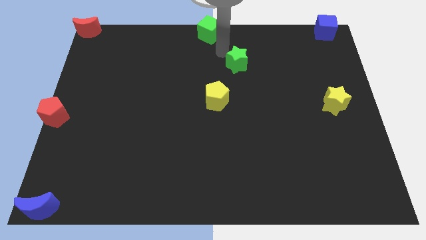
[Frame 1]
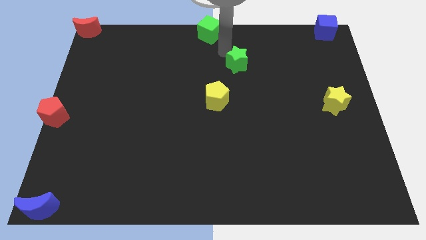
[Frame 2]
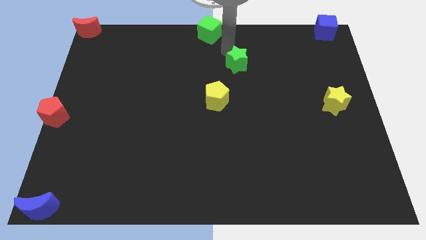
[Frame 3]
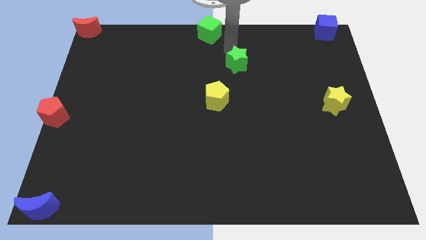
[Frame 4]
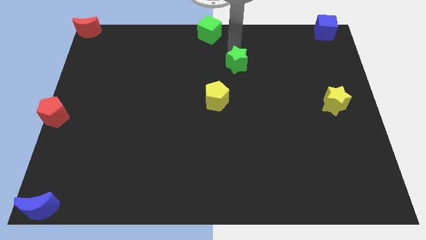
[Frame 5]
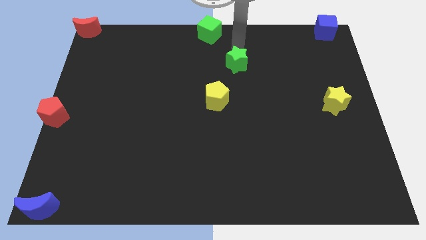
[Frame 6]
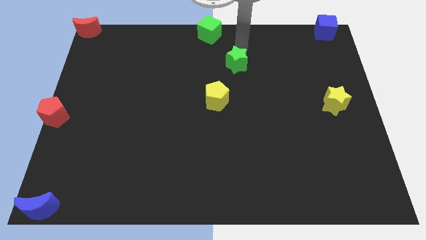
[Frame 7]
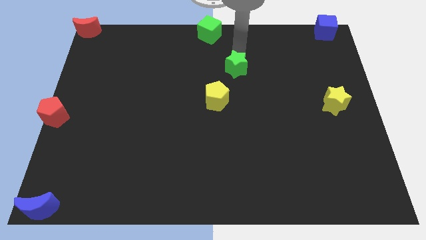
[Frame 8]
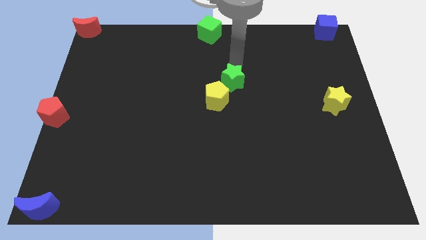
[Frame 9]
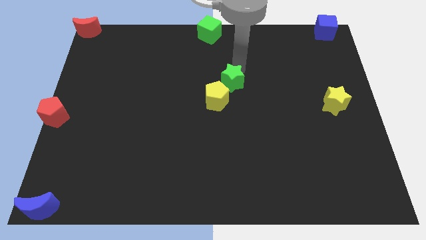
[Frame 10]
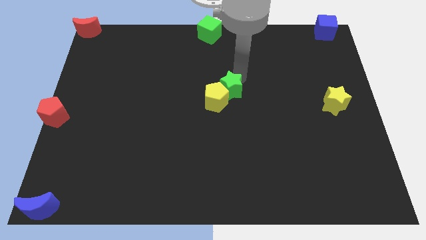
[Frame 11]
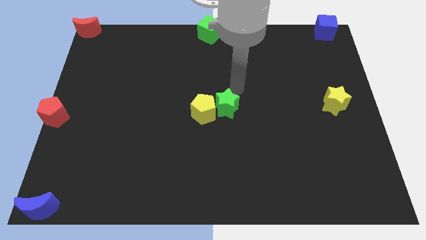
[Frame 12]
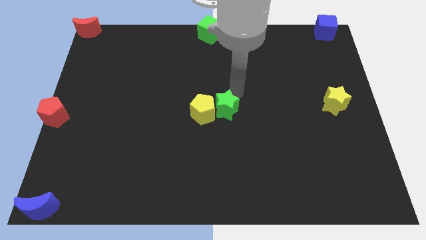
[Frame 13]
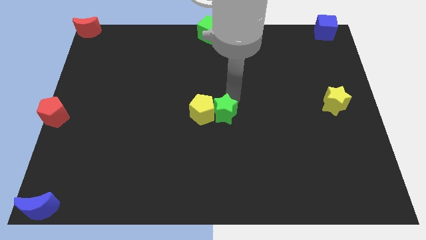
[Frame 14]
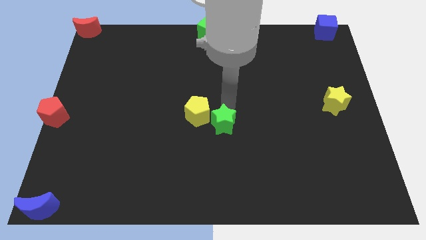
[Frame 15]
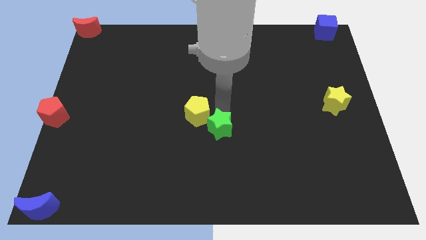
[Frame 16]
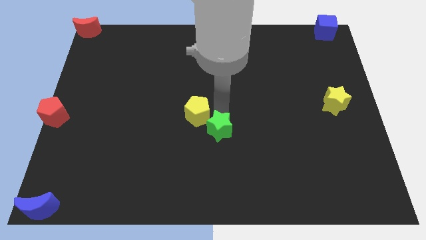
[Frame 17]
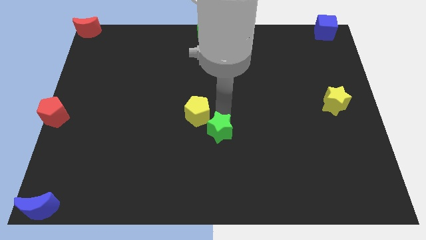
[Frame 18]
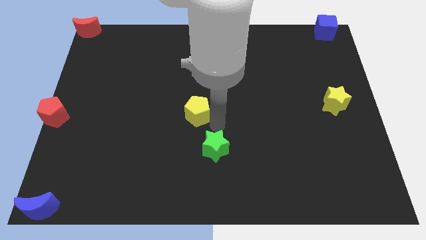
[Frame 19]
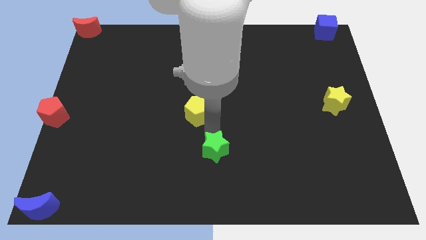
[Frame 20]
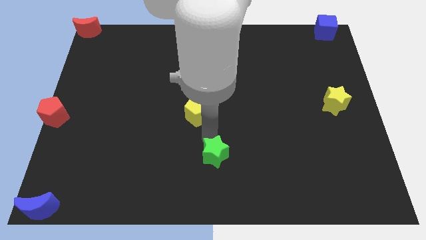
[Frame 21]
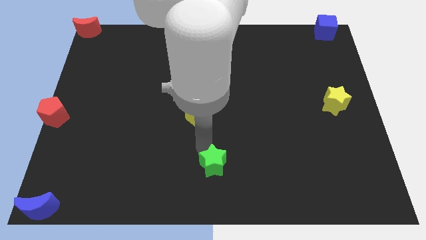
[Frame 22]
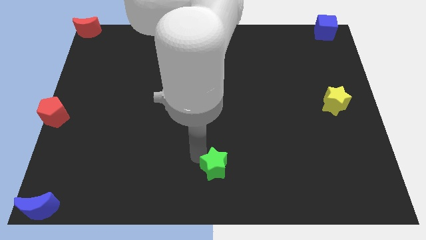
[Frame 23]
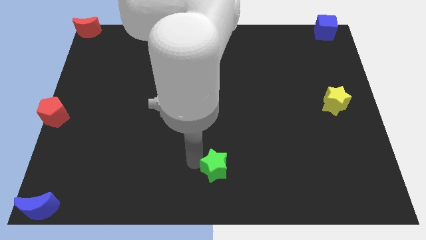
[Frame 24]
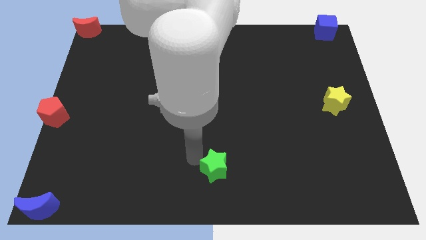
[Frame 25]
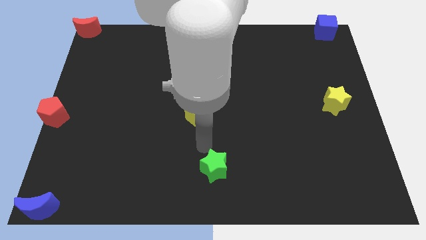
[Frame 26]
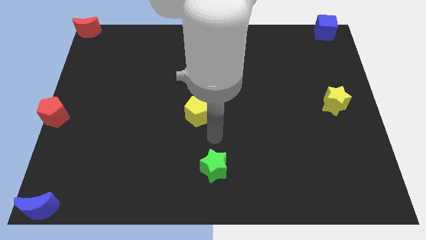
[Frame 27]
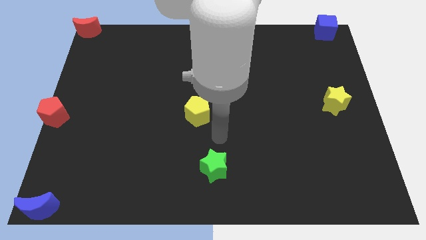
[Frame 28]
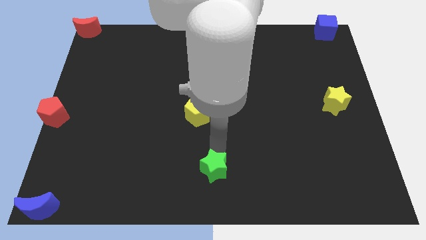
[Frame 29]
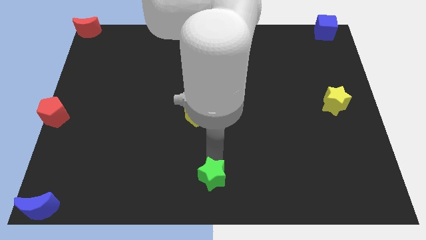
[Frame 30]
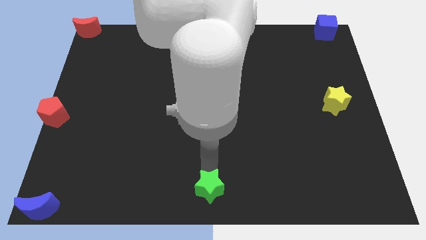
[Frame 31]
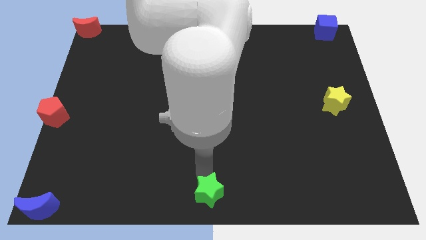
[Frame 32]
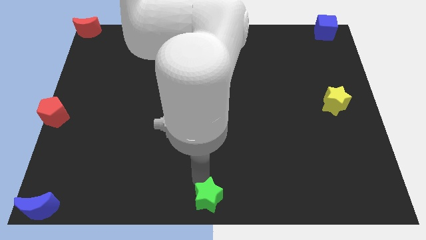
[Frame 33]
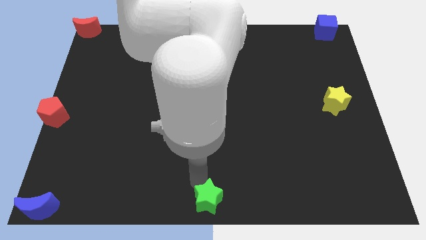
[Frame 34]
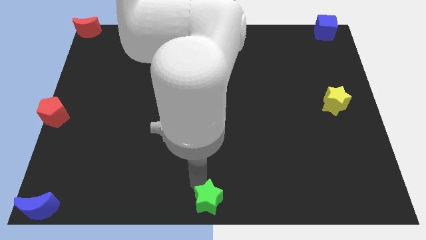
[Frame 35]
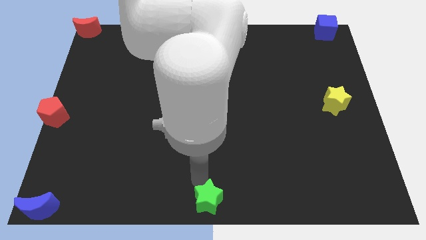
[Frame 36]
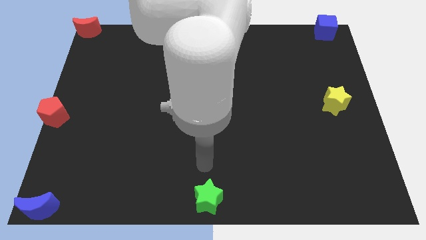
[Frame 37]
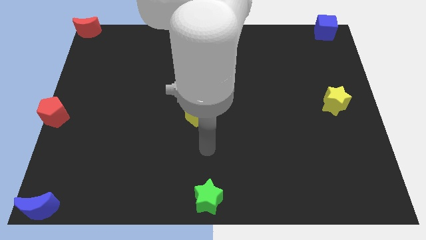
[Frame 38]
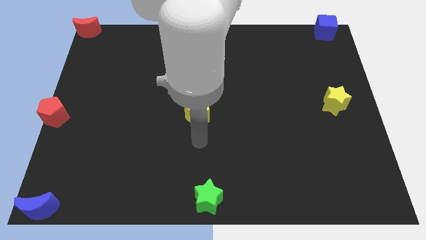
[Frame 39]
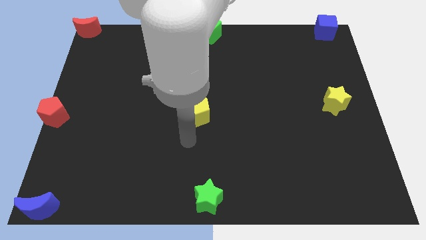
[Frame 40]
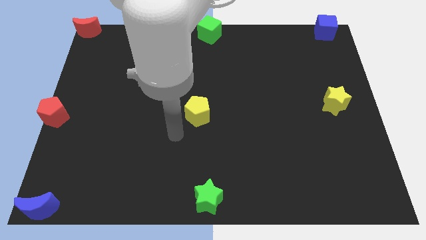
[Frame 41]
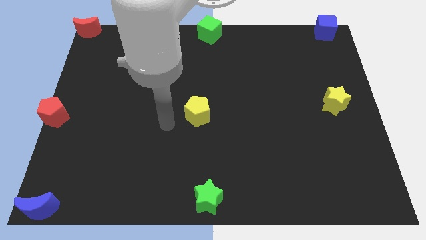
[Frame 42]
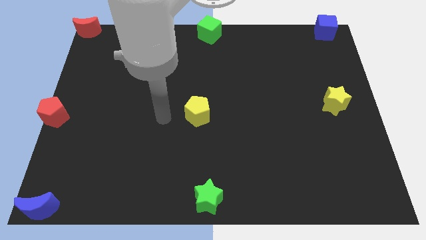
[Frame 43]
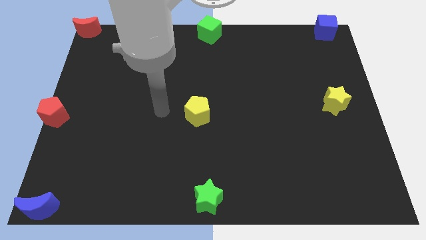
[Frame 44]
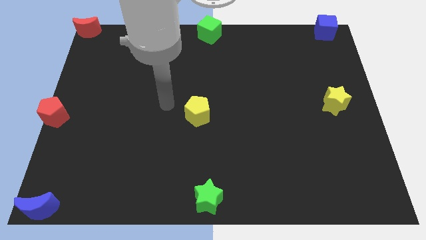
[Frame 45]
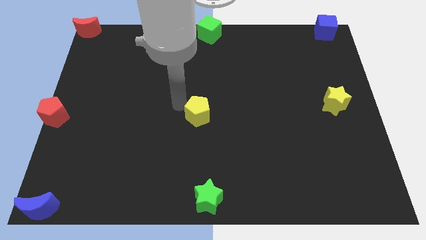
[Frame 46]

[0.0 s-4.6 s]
move the green star to the bottom centre of the board

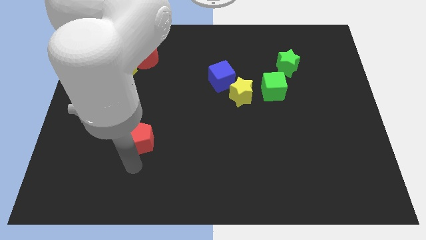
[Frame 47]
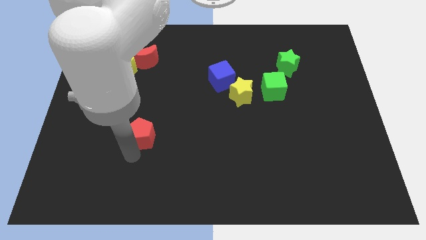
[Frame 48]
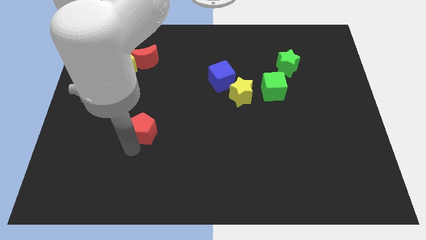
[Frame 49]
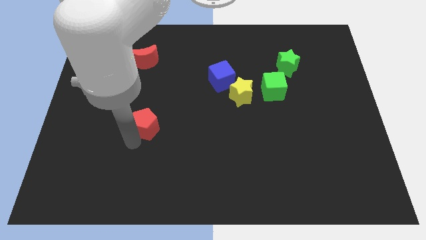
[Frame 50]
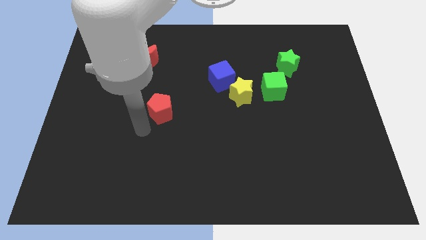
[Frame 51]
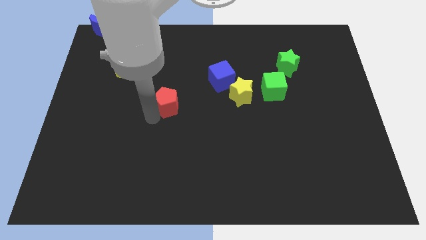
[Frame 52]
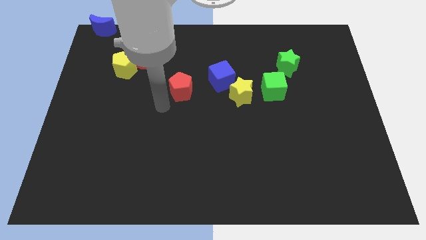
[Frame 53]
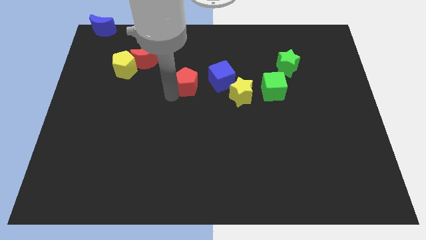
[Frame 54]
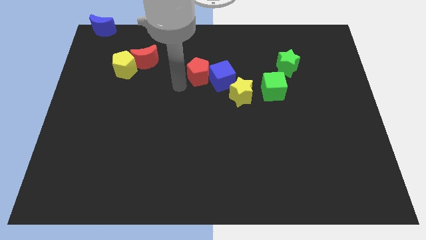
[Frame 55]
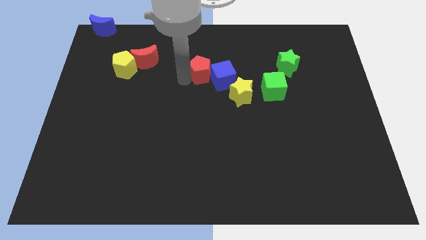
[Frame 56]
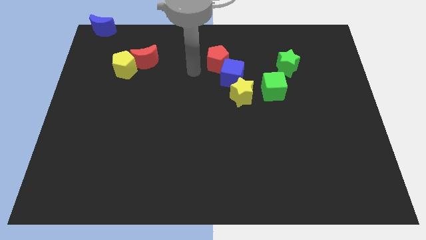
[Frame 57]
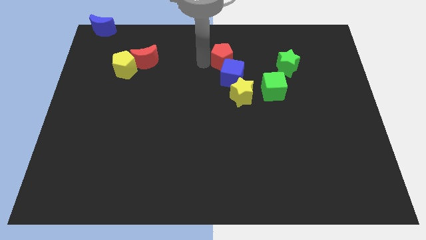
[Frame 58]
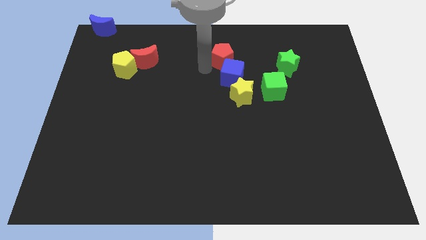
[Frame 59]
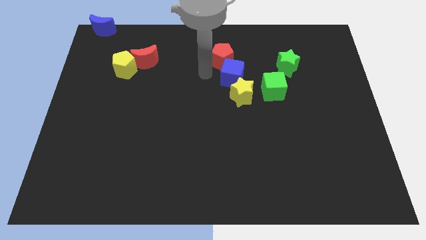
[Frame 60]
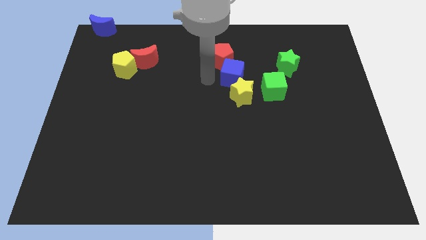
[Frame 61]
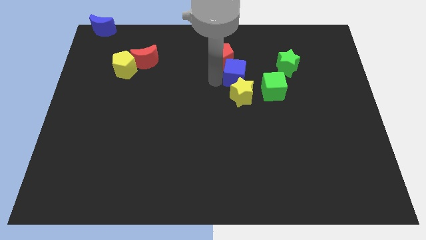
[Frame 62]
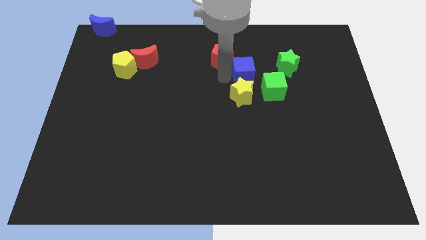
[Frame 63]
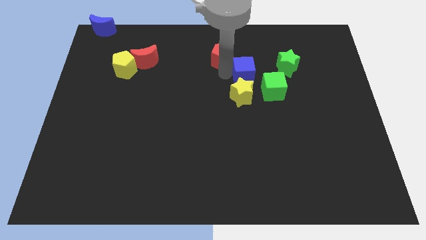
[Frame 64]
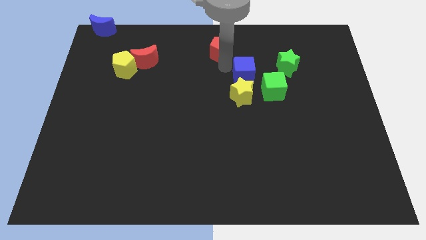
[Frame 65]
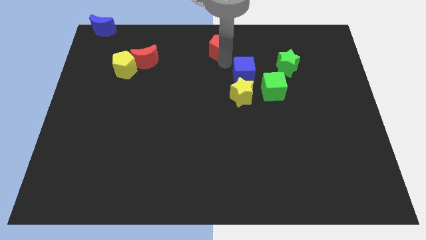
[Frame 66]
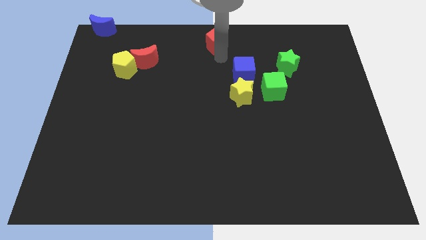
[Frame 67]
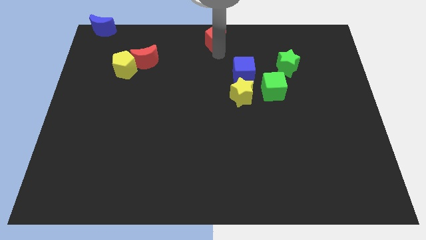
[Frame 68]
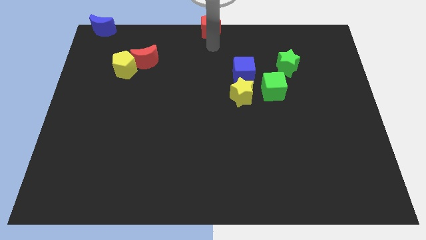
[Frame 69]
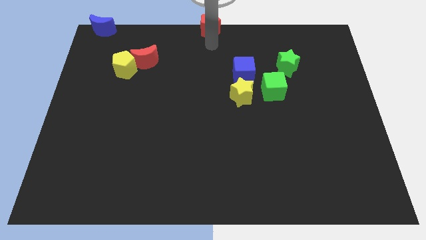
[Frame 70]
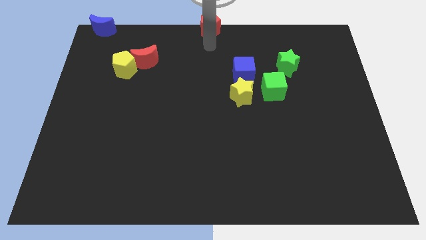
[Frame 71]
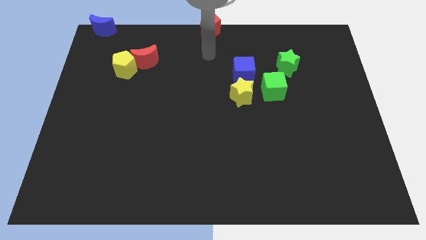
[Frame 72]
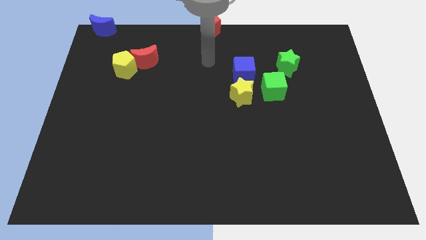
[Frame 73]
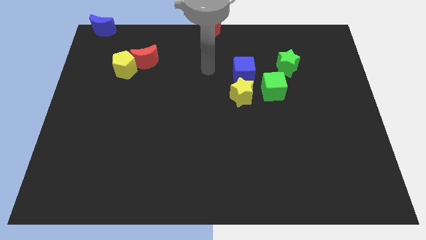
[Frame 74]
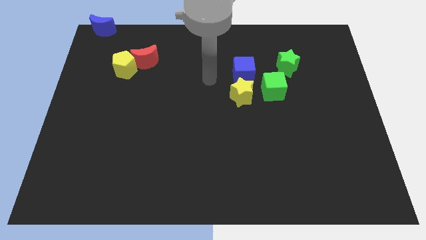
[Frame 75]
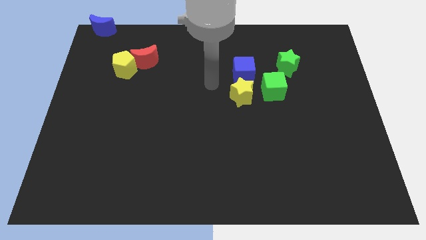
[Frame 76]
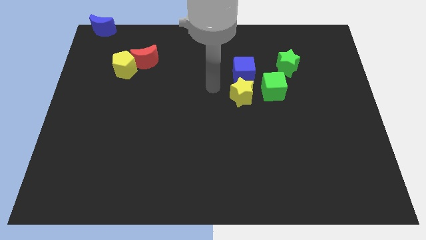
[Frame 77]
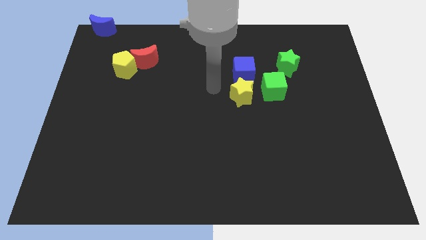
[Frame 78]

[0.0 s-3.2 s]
put the red pentagon diagonally top left to the blue cube

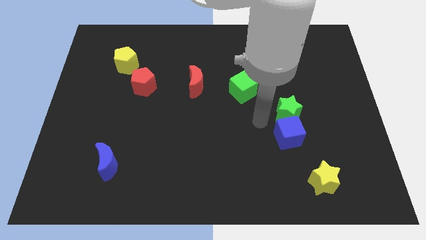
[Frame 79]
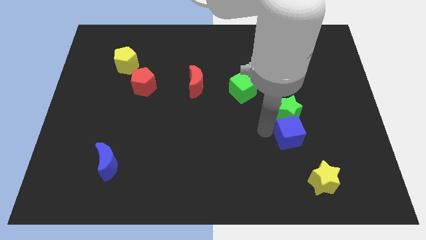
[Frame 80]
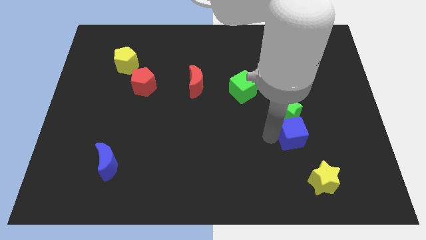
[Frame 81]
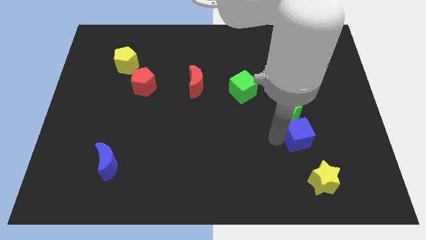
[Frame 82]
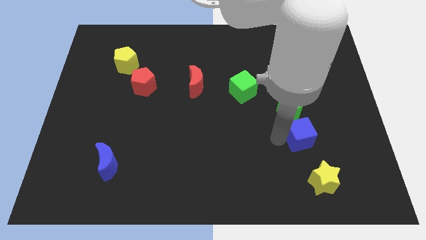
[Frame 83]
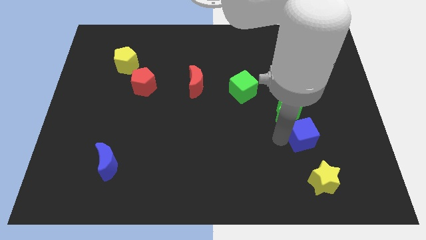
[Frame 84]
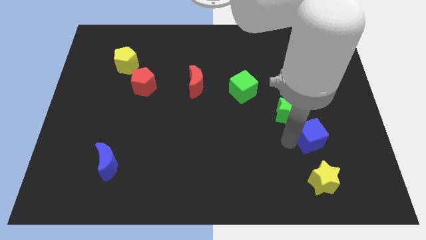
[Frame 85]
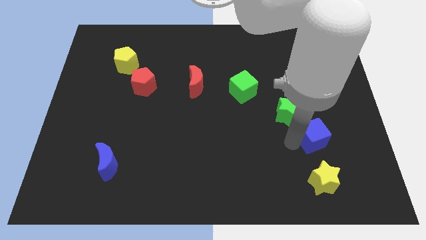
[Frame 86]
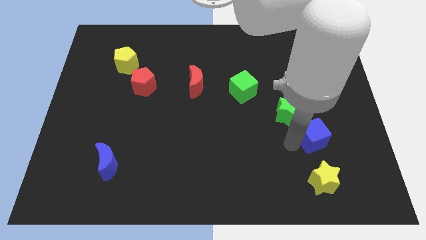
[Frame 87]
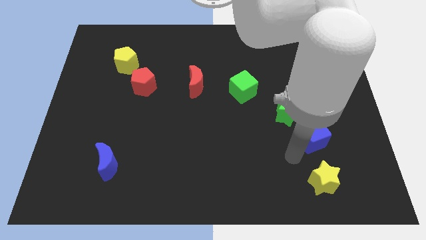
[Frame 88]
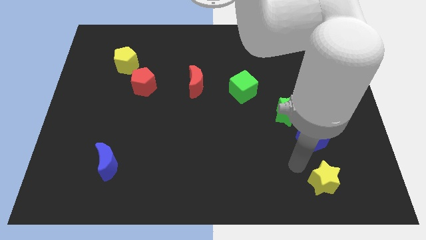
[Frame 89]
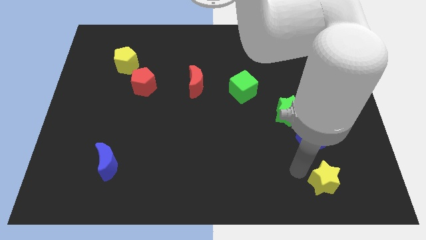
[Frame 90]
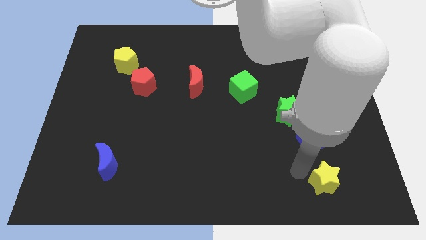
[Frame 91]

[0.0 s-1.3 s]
push the blue cube vertically to the top of the yellow star
